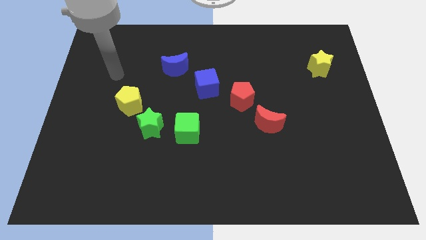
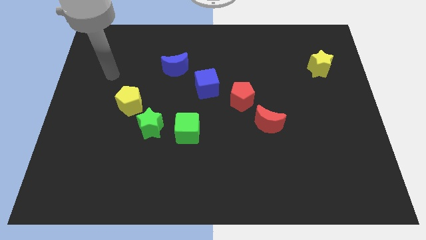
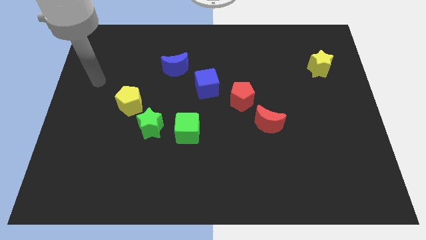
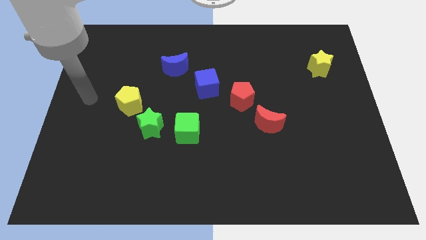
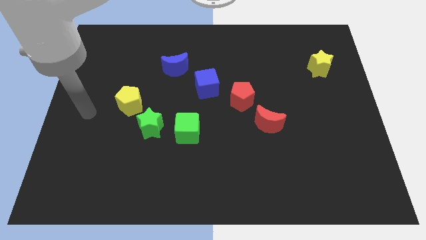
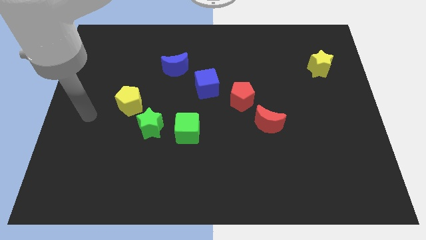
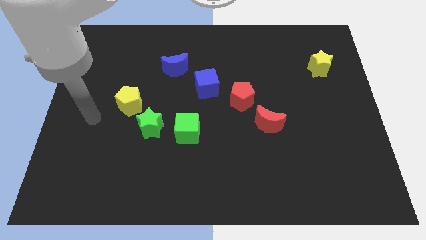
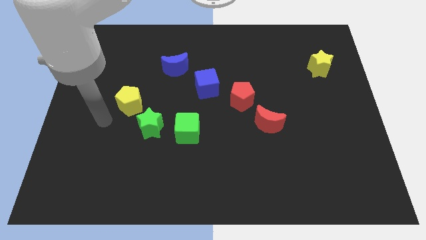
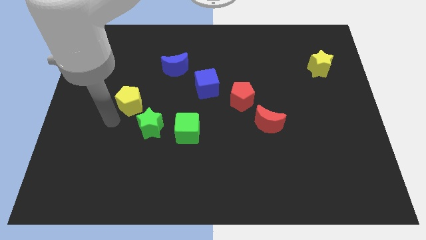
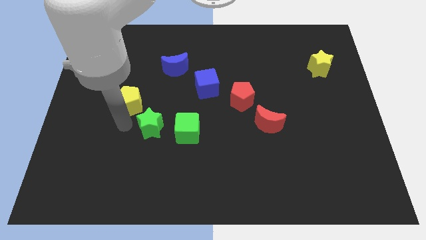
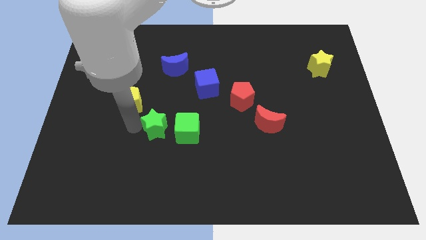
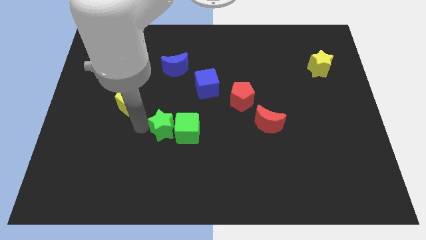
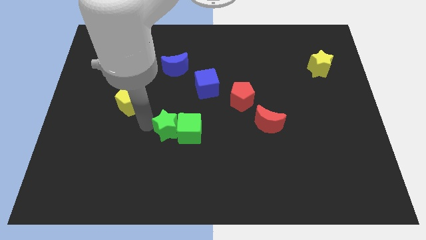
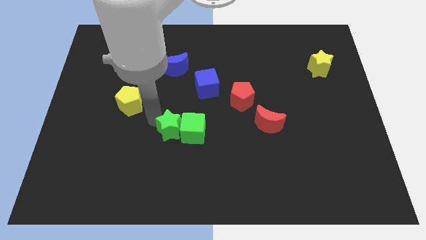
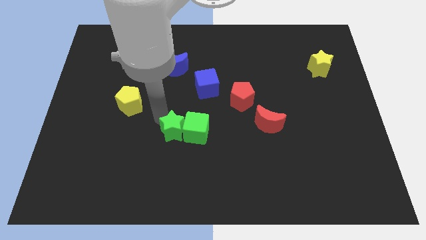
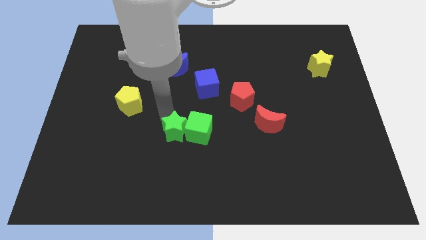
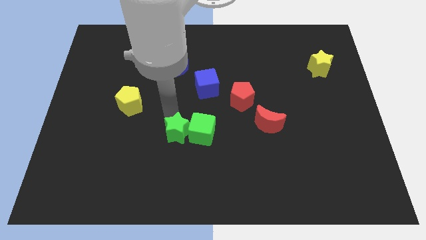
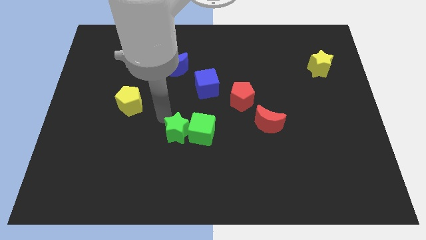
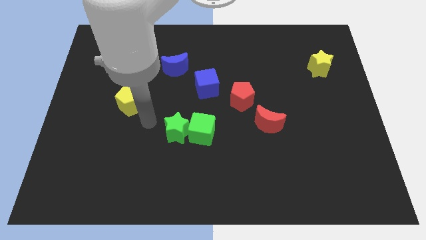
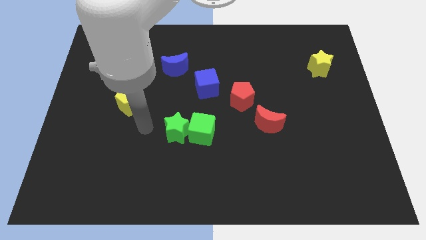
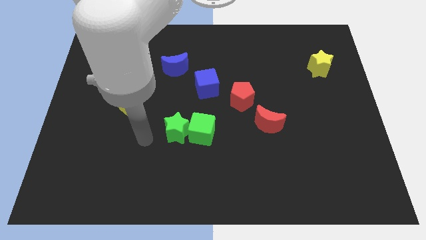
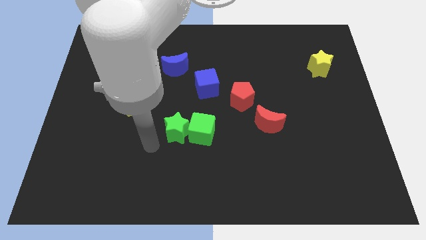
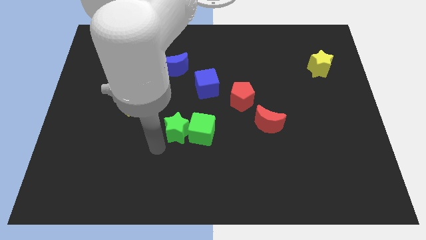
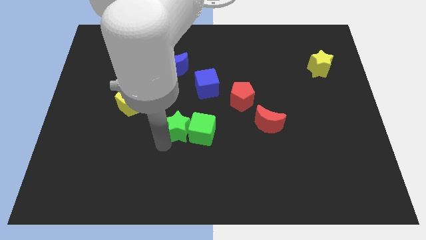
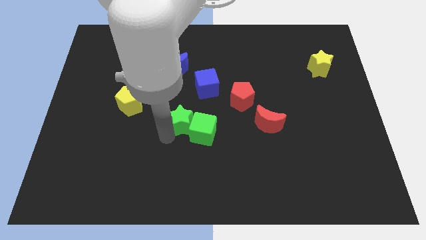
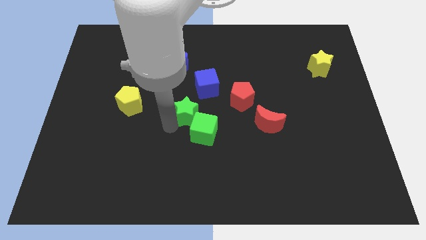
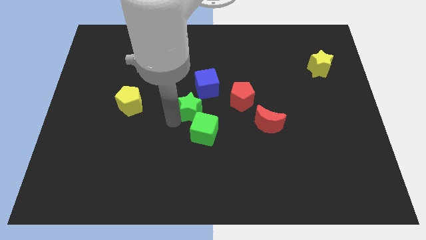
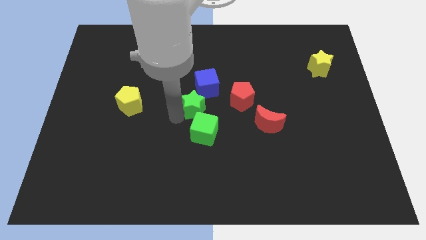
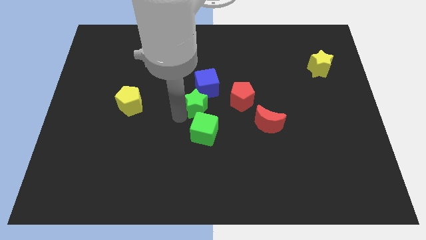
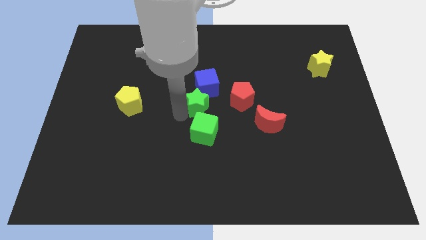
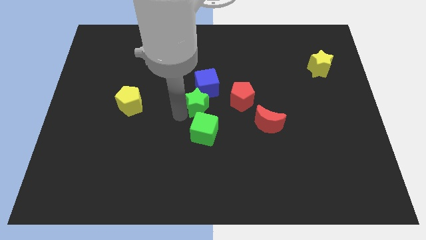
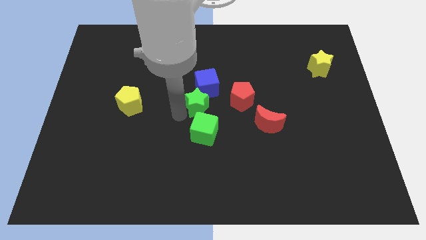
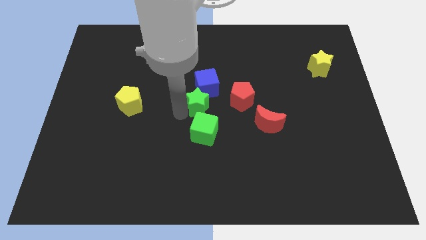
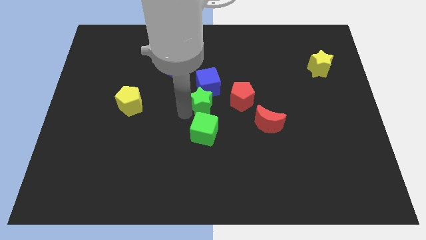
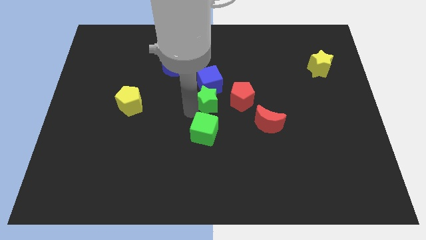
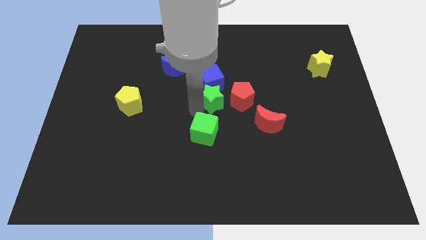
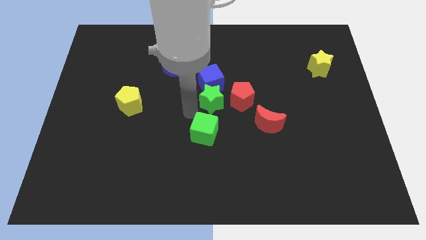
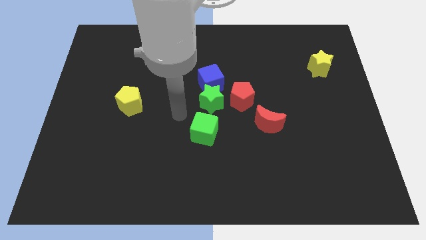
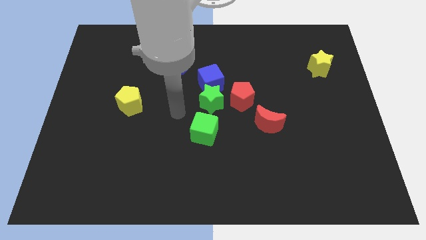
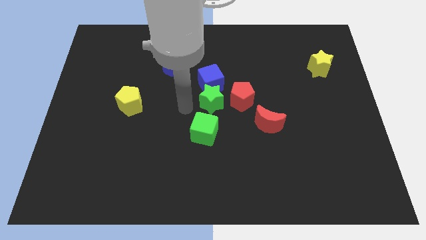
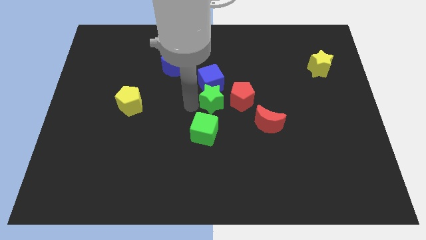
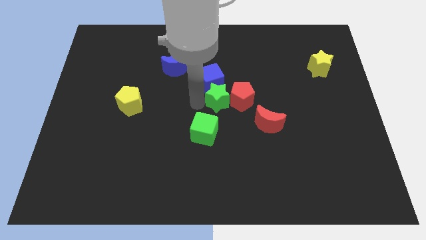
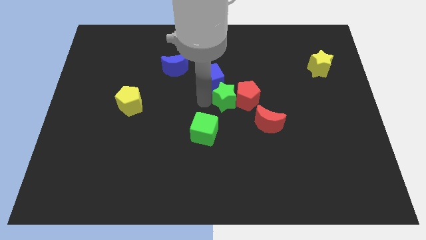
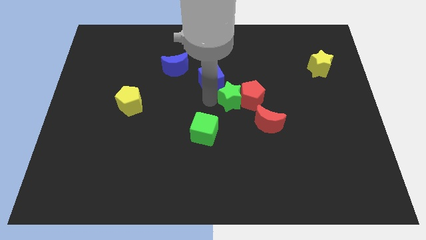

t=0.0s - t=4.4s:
move the green star to the red pentagon

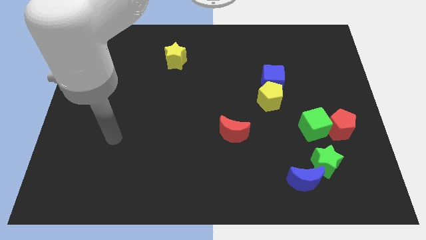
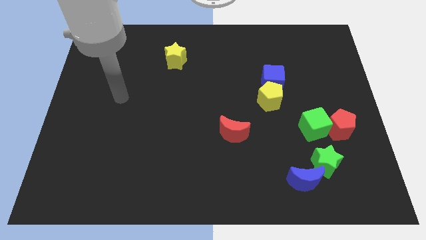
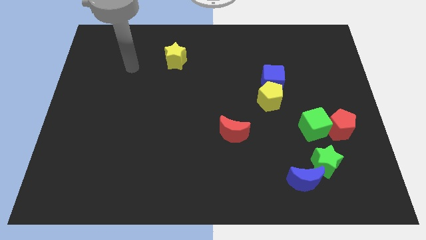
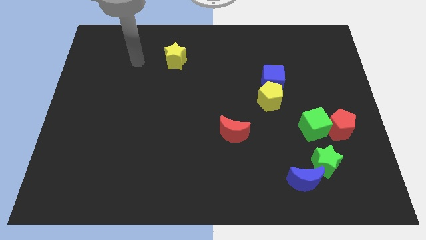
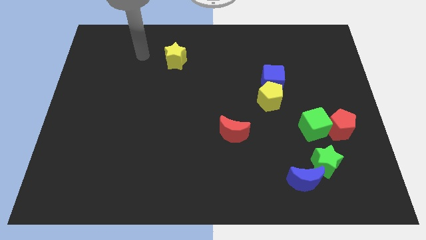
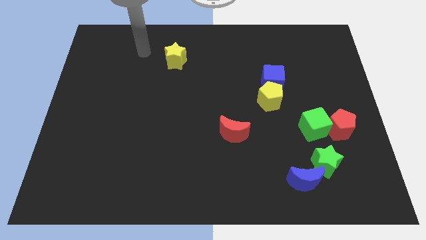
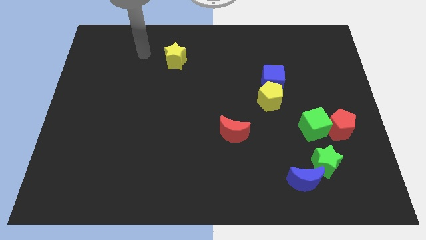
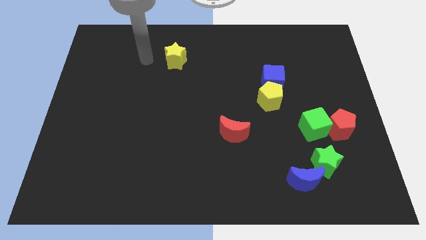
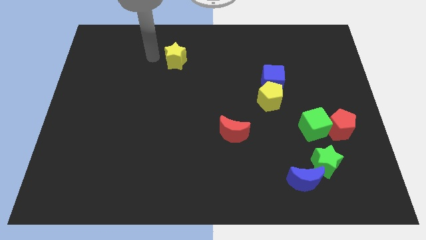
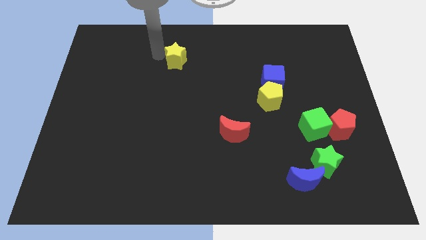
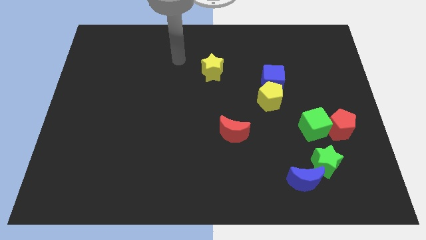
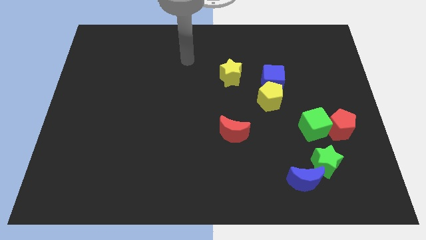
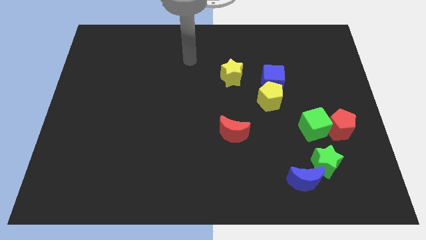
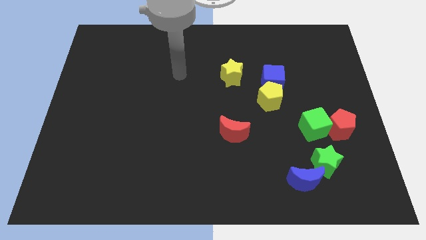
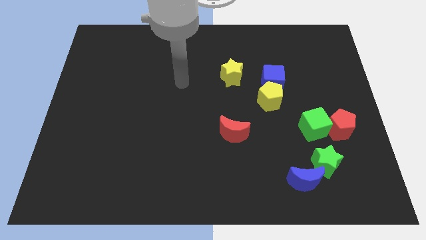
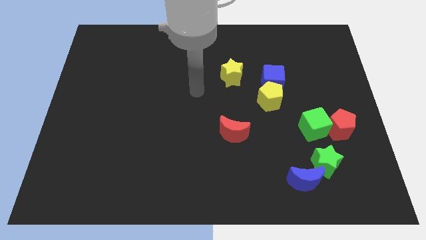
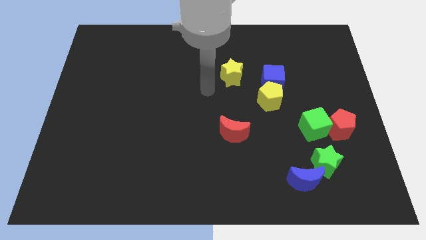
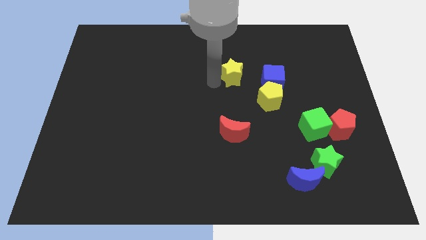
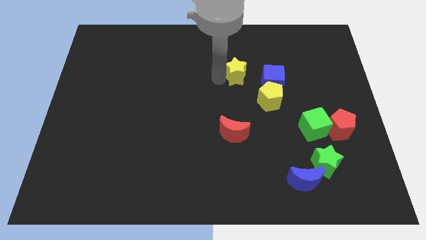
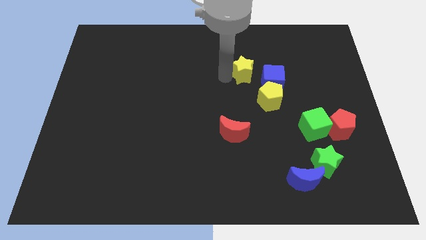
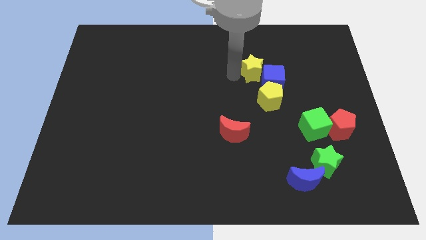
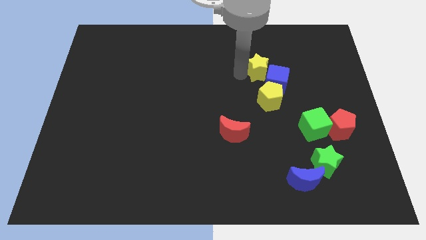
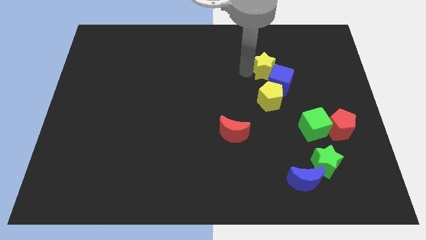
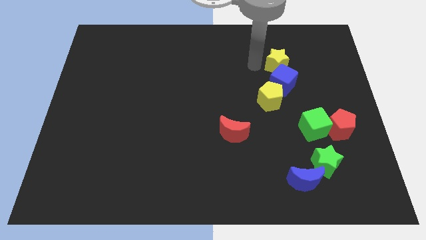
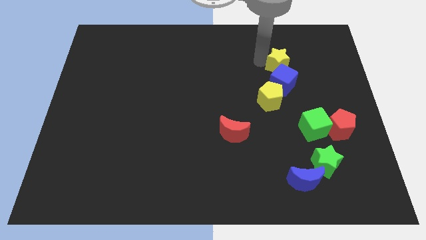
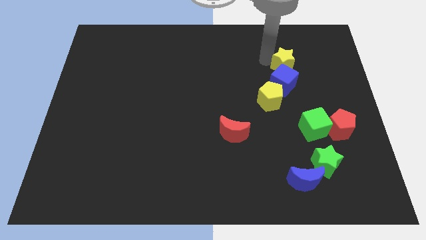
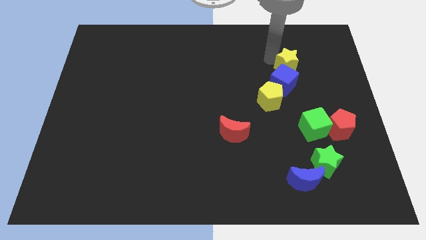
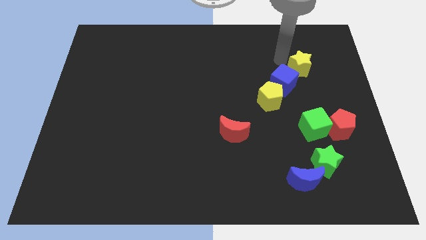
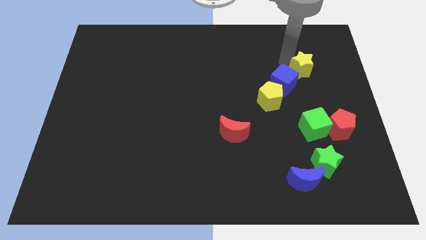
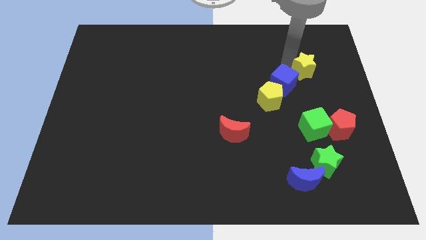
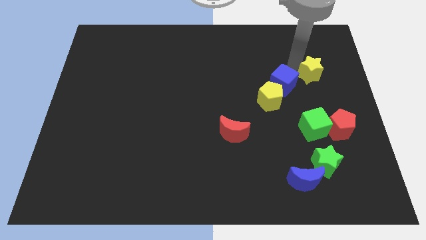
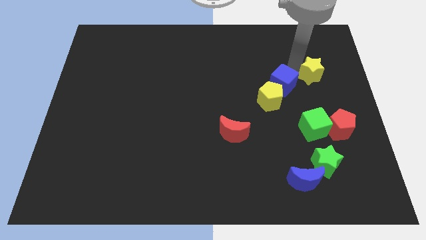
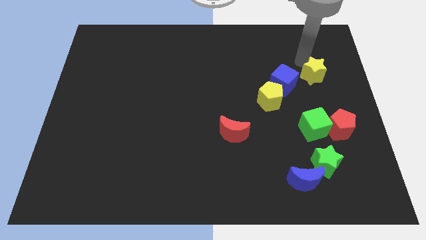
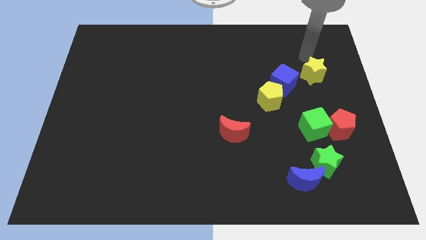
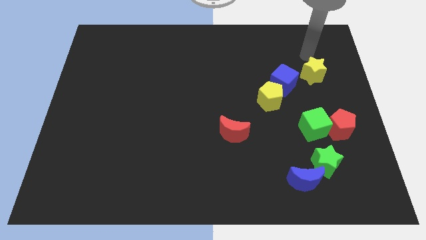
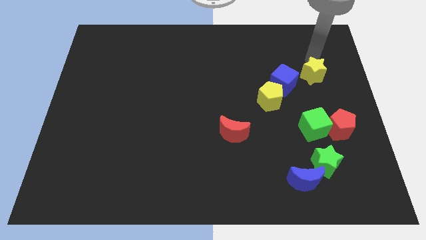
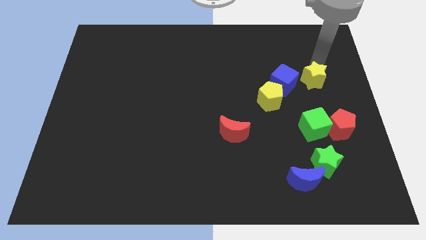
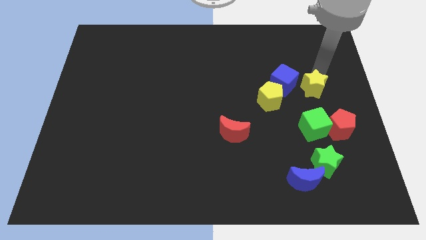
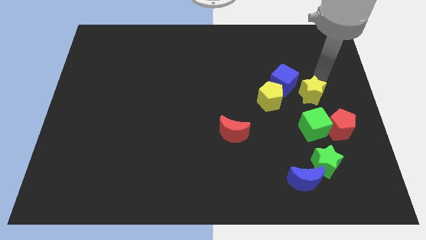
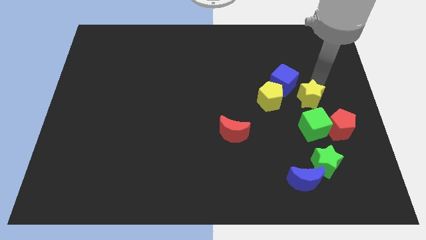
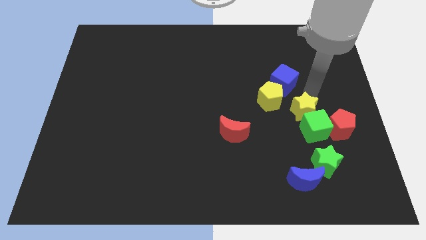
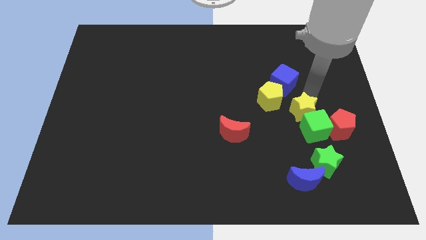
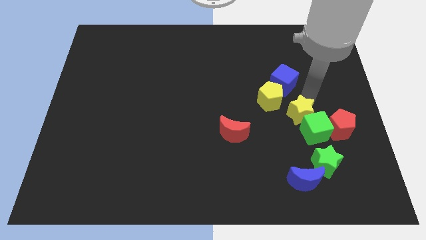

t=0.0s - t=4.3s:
put the yellow star towards the green cube
